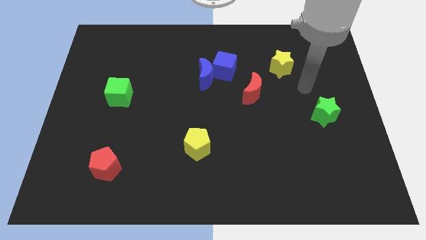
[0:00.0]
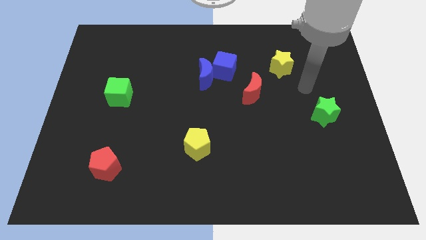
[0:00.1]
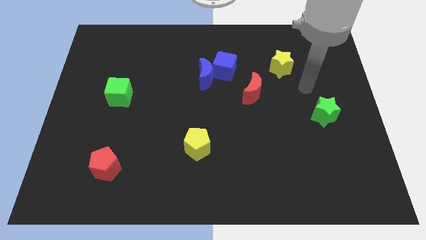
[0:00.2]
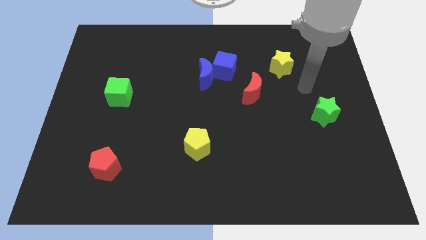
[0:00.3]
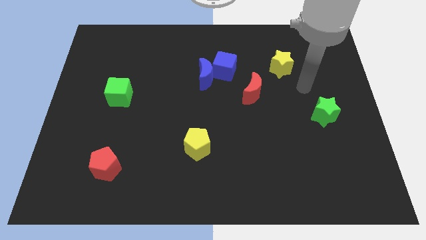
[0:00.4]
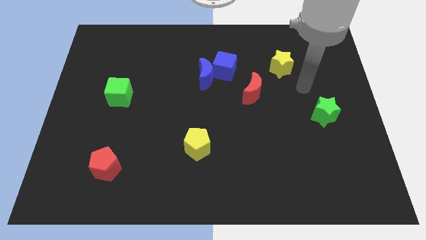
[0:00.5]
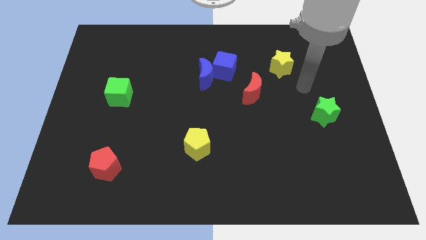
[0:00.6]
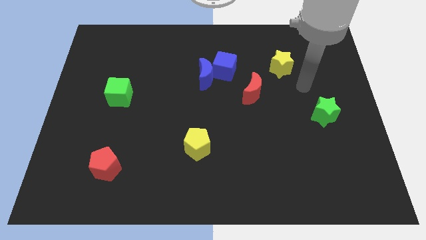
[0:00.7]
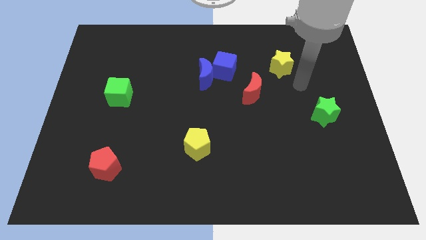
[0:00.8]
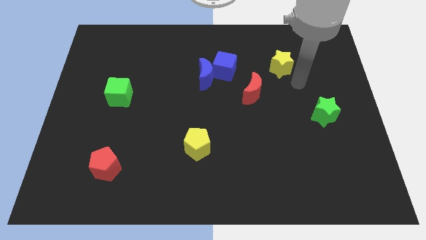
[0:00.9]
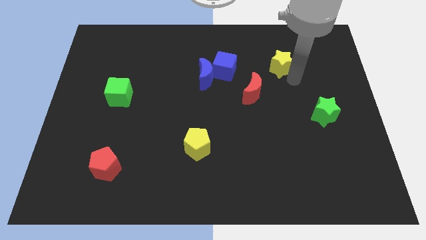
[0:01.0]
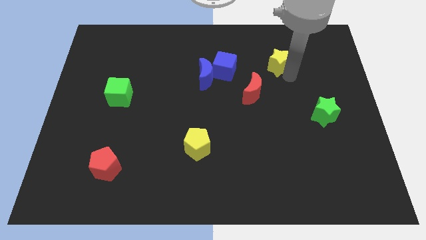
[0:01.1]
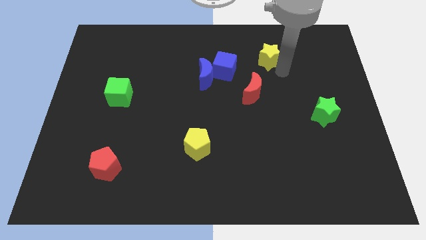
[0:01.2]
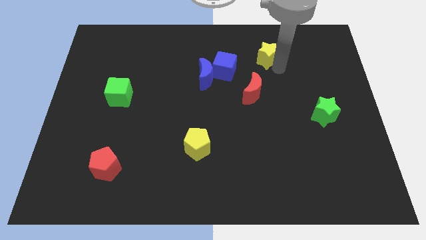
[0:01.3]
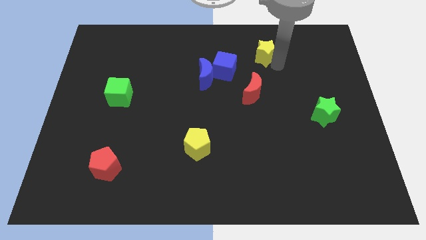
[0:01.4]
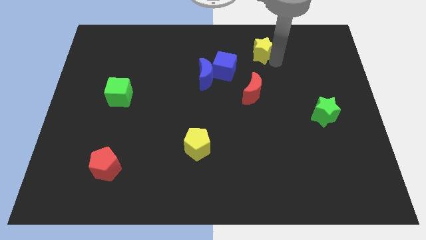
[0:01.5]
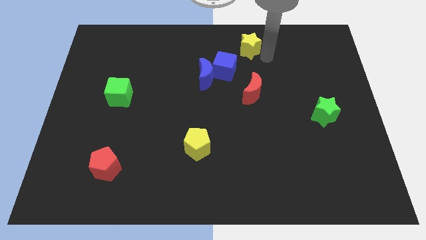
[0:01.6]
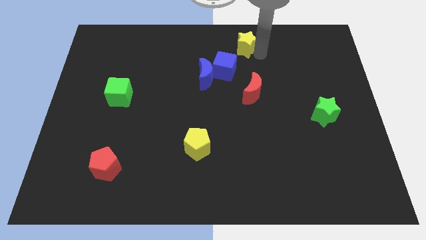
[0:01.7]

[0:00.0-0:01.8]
place the yellow star above the red crescent

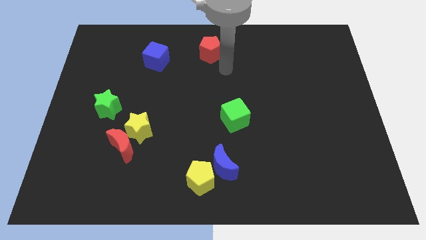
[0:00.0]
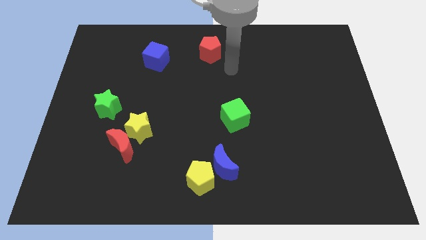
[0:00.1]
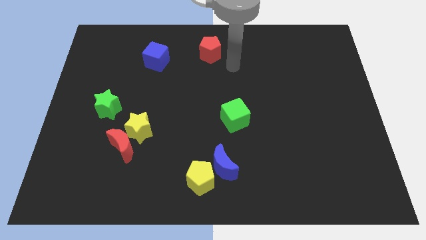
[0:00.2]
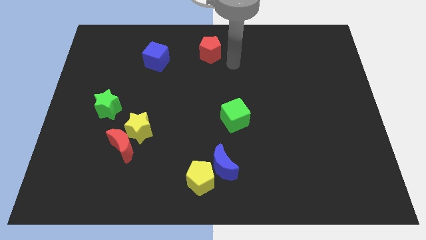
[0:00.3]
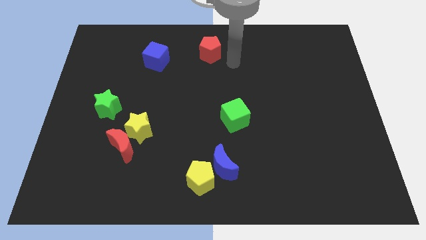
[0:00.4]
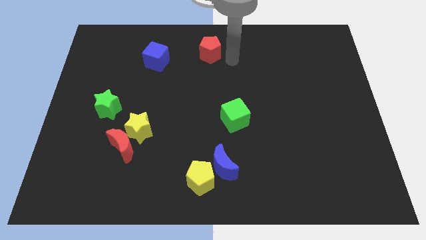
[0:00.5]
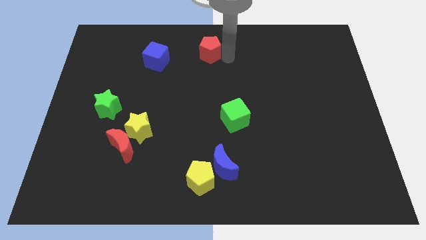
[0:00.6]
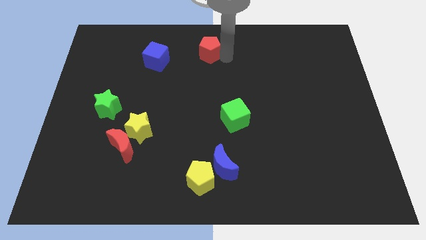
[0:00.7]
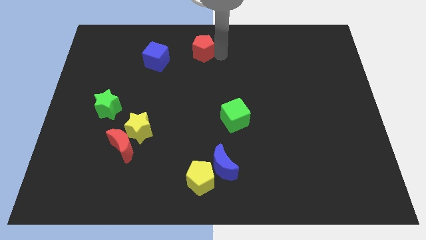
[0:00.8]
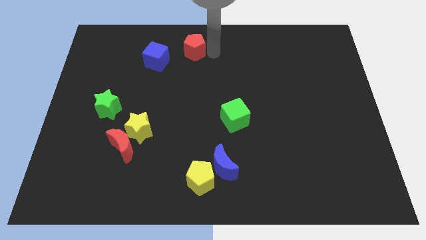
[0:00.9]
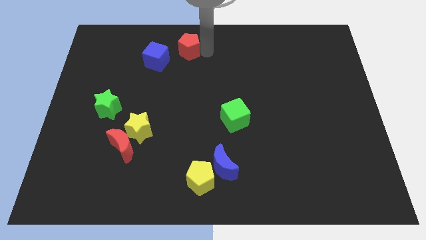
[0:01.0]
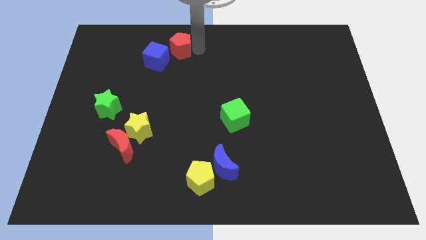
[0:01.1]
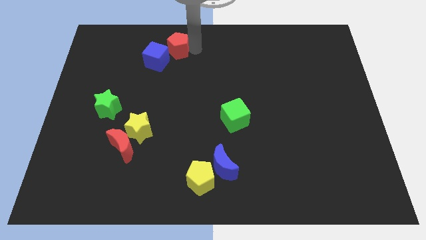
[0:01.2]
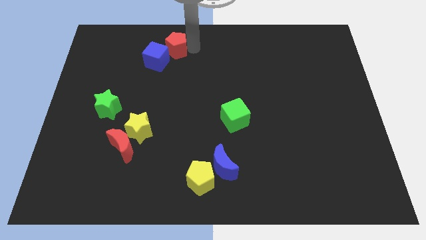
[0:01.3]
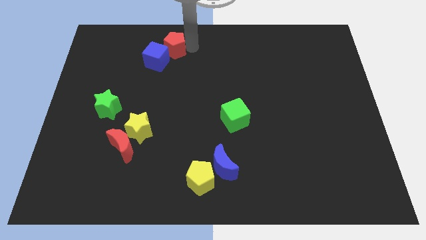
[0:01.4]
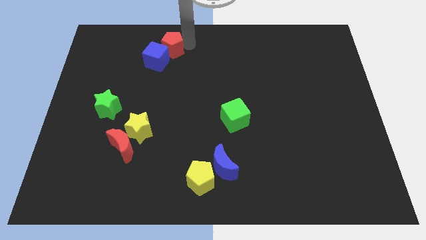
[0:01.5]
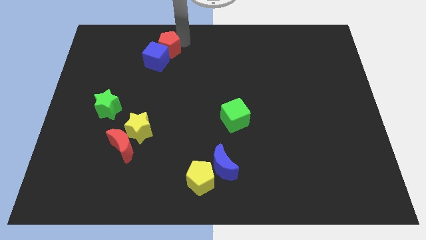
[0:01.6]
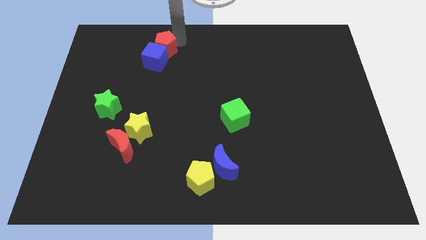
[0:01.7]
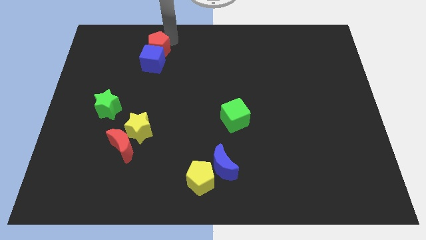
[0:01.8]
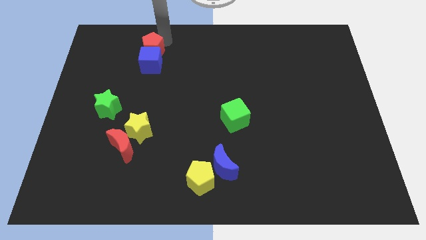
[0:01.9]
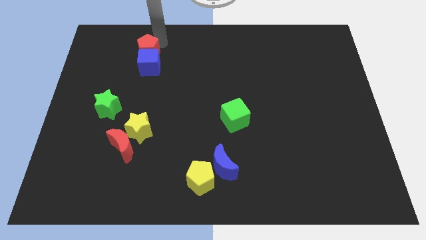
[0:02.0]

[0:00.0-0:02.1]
put red pentagon on top of blue cube

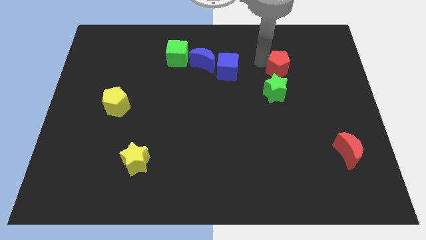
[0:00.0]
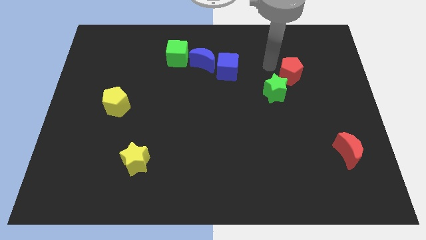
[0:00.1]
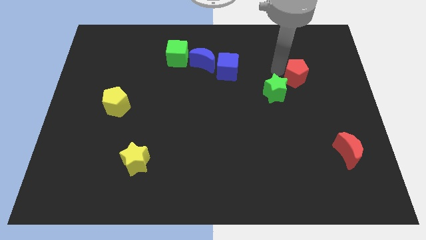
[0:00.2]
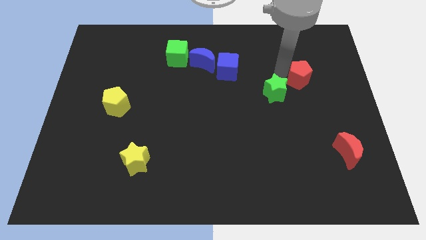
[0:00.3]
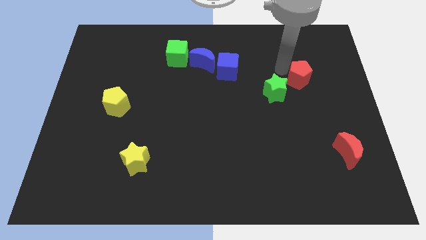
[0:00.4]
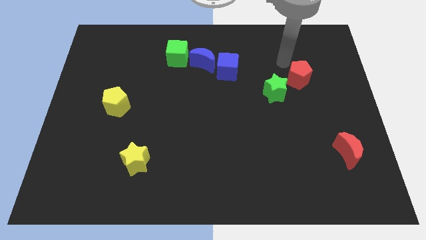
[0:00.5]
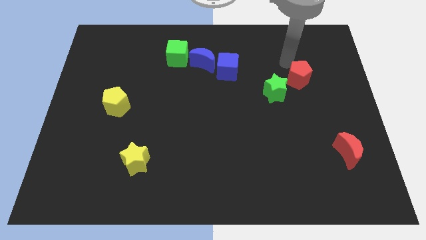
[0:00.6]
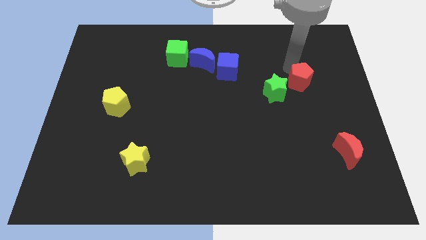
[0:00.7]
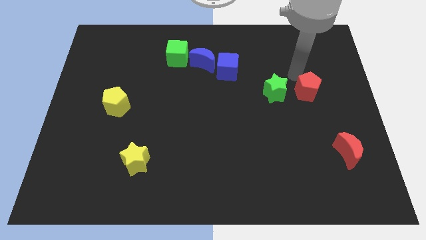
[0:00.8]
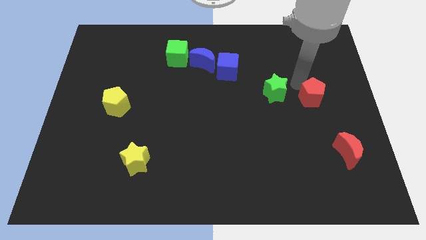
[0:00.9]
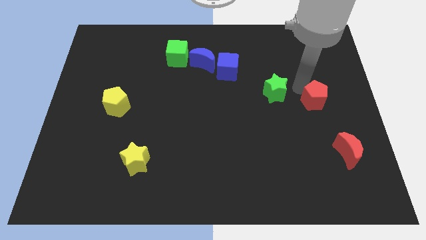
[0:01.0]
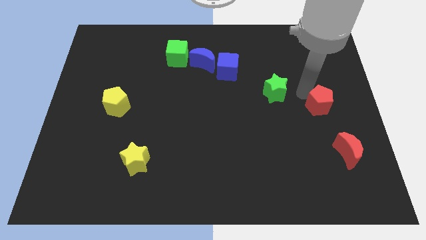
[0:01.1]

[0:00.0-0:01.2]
move the red pentagon down

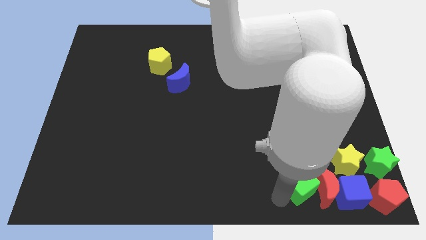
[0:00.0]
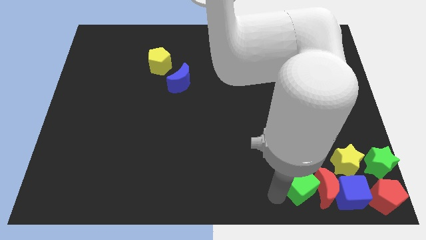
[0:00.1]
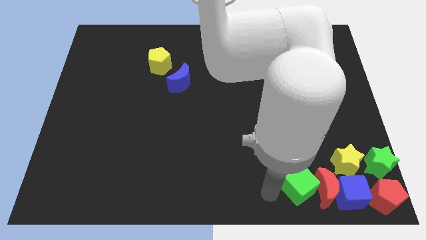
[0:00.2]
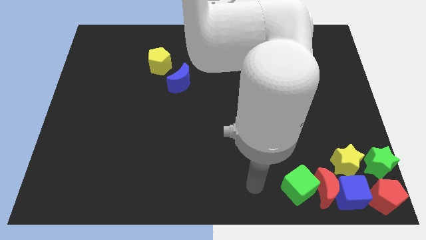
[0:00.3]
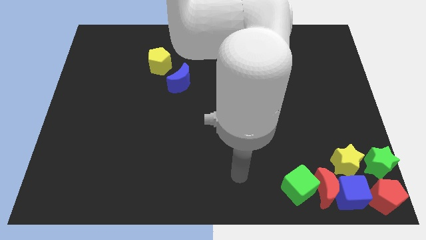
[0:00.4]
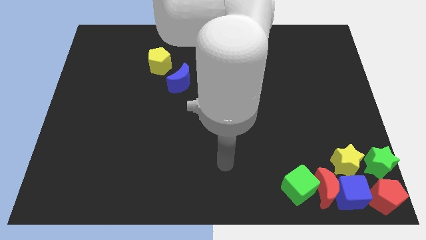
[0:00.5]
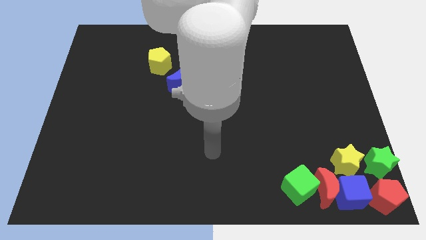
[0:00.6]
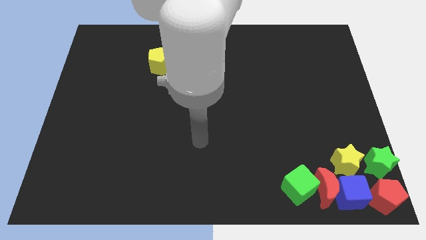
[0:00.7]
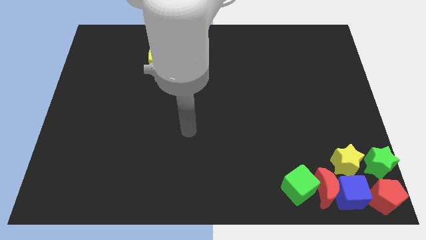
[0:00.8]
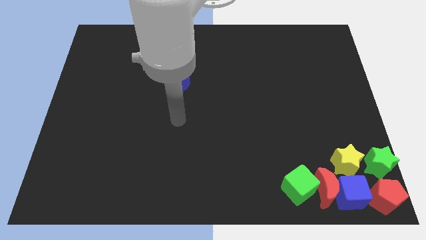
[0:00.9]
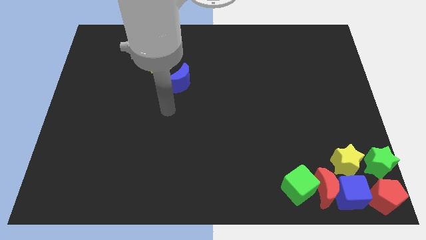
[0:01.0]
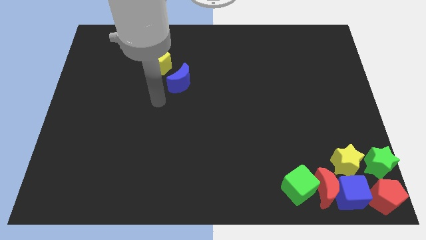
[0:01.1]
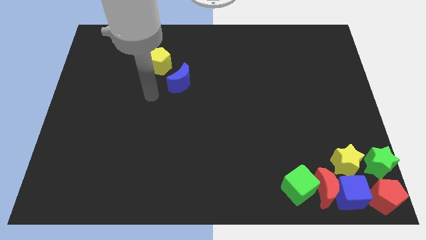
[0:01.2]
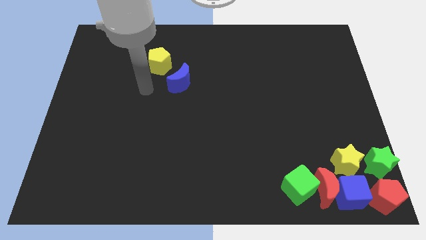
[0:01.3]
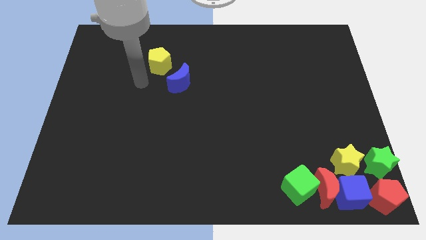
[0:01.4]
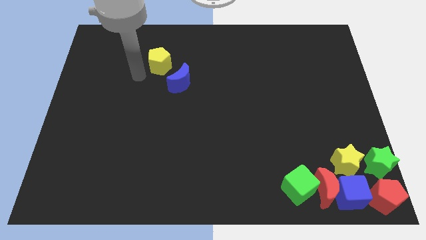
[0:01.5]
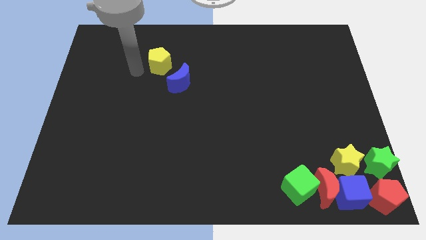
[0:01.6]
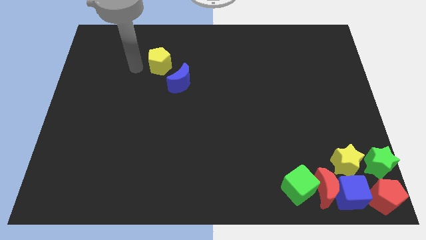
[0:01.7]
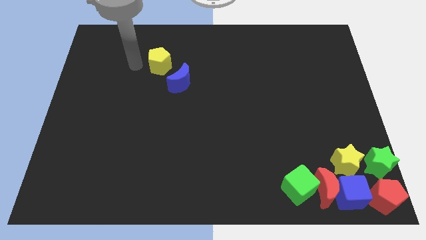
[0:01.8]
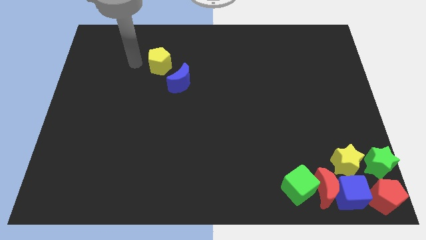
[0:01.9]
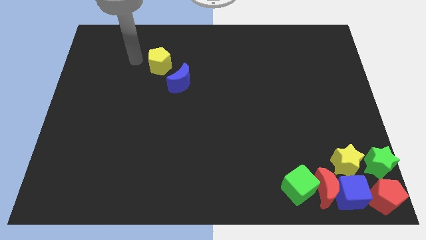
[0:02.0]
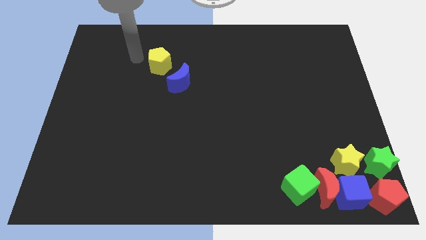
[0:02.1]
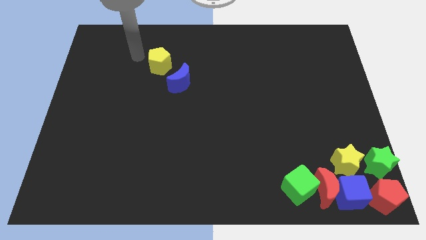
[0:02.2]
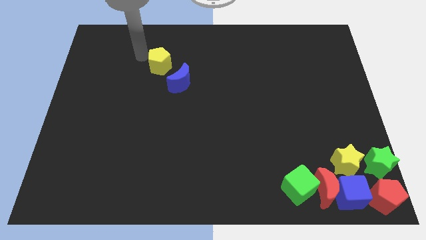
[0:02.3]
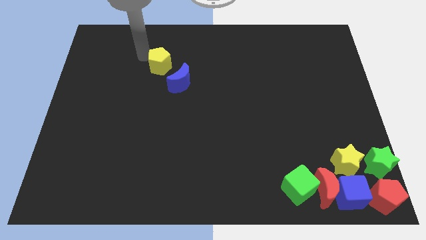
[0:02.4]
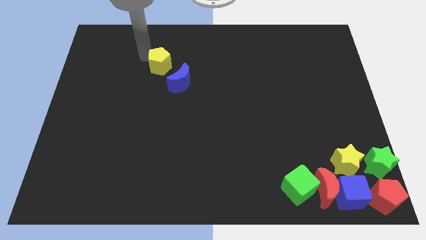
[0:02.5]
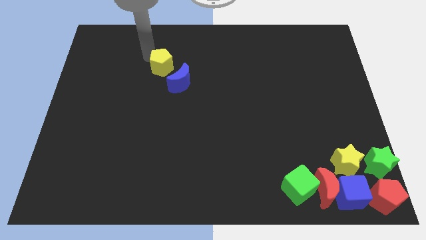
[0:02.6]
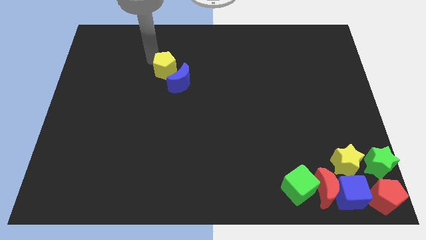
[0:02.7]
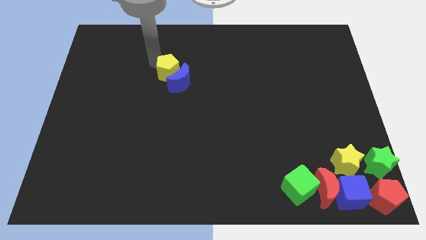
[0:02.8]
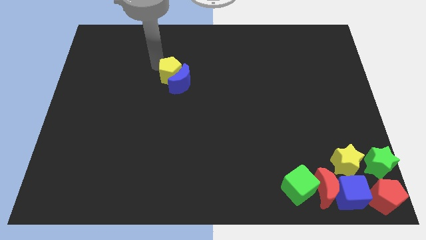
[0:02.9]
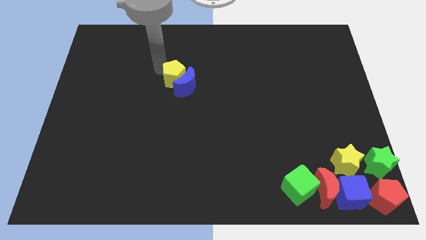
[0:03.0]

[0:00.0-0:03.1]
move the yellow pentagon into the blue moon

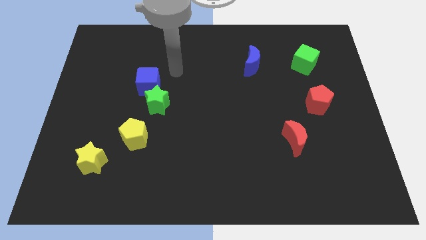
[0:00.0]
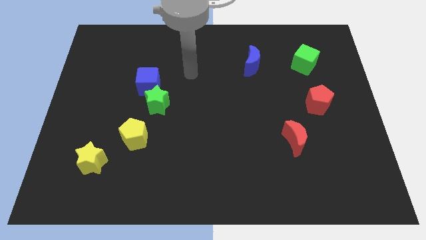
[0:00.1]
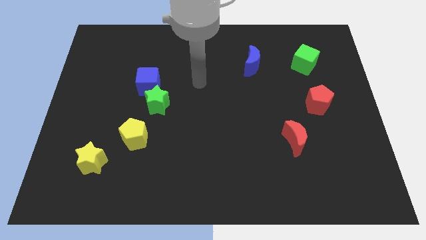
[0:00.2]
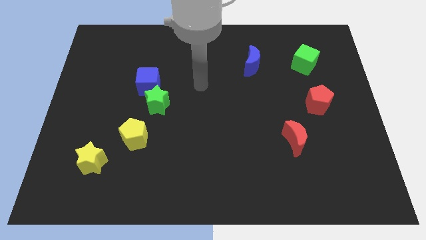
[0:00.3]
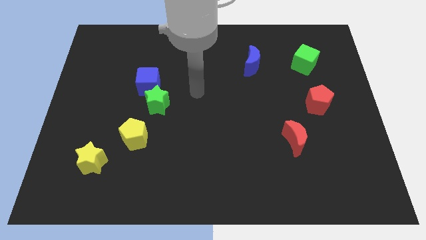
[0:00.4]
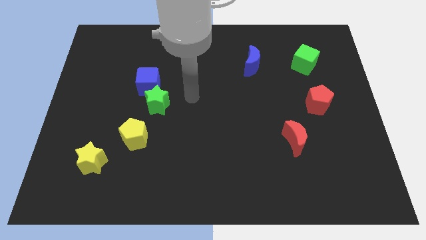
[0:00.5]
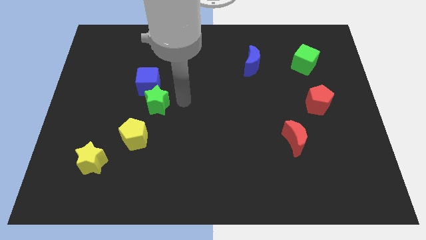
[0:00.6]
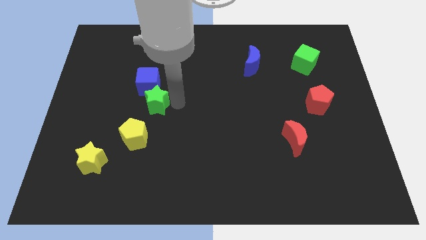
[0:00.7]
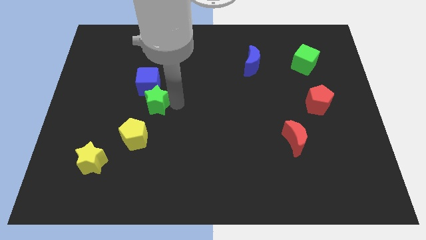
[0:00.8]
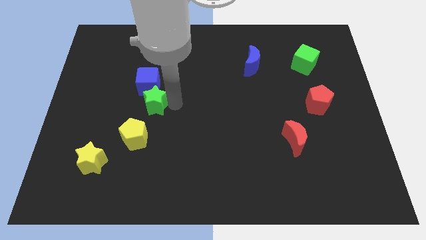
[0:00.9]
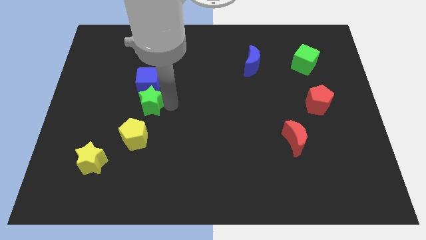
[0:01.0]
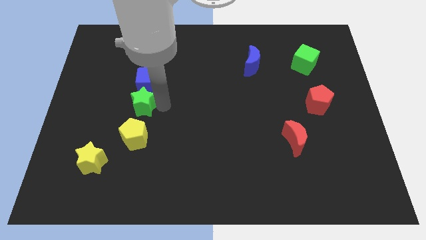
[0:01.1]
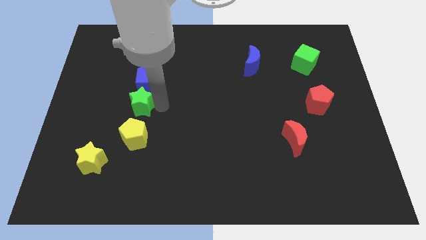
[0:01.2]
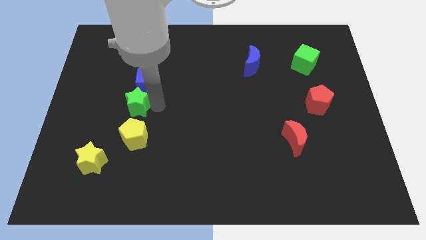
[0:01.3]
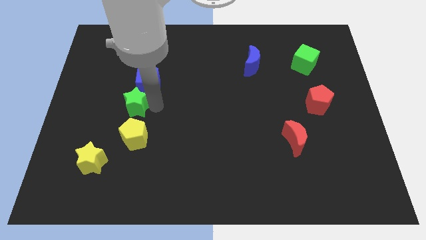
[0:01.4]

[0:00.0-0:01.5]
slide the green star above the yellow pentagon
